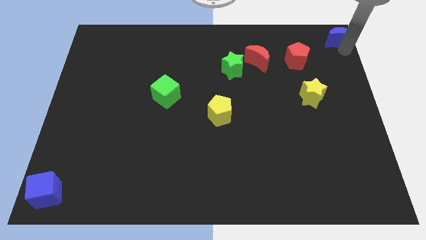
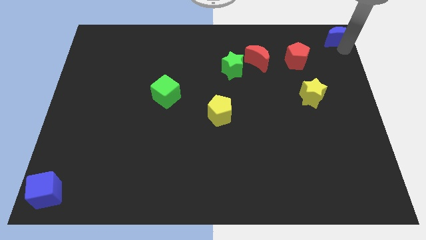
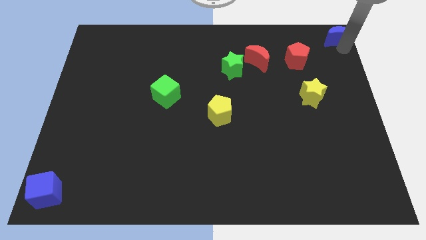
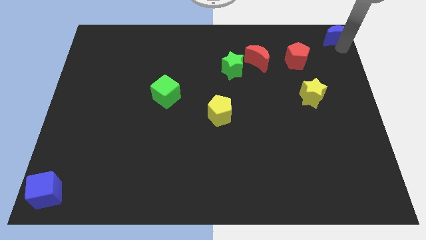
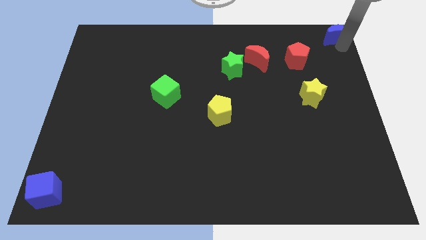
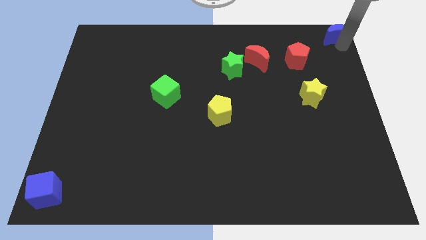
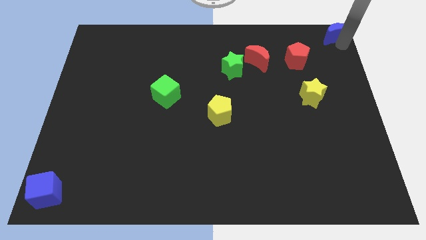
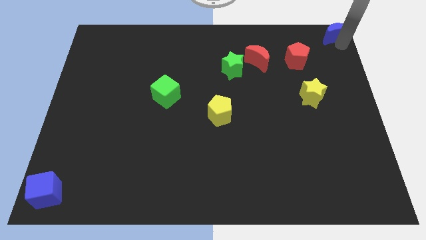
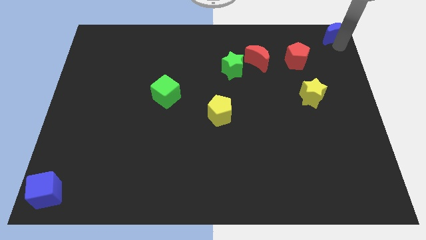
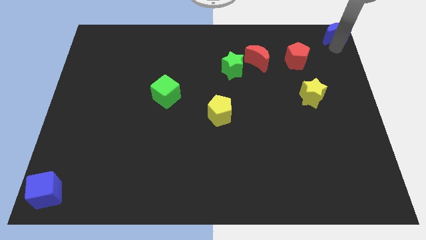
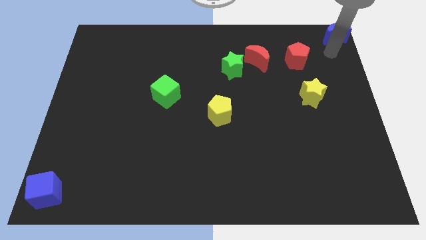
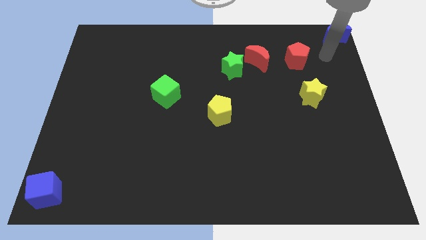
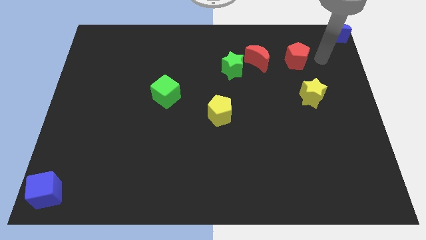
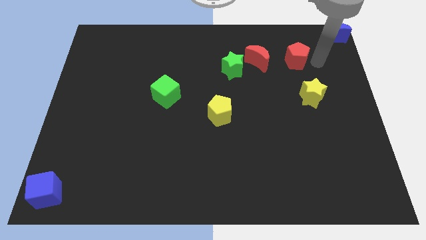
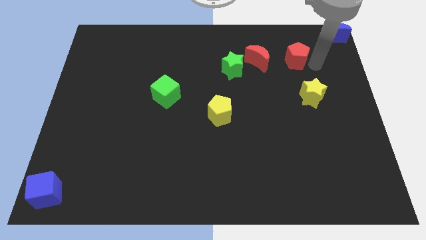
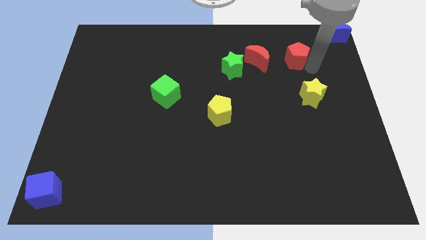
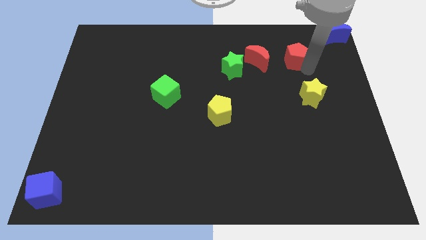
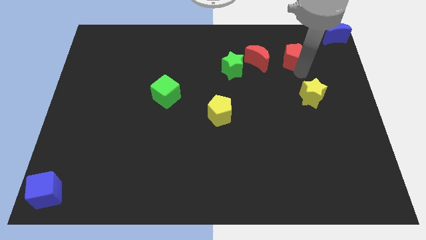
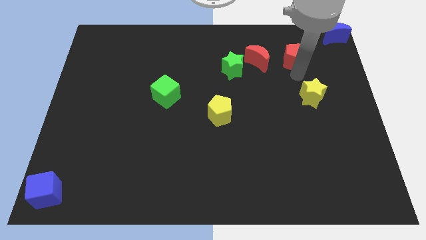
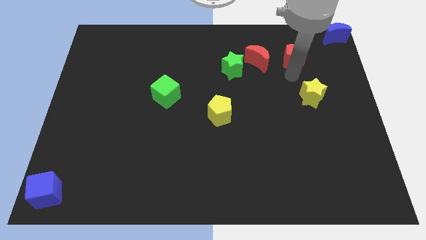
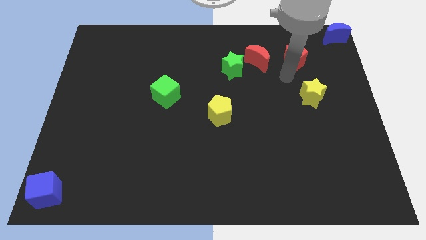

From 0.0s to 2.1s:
move arm near to the red pentagon

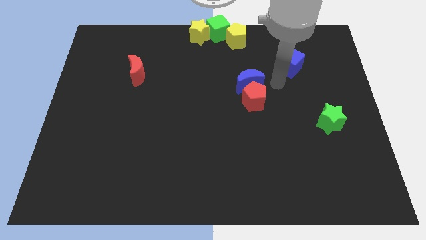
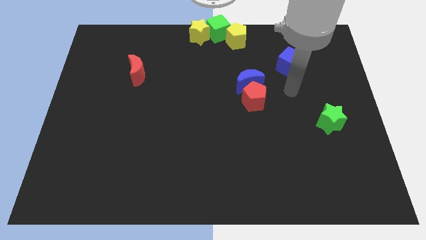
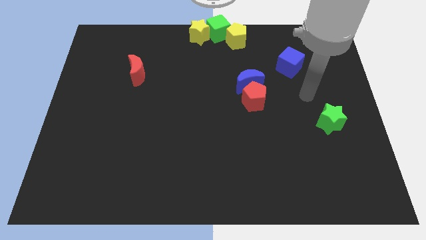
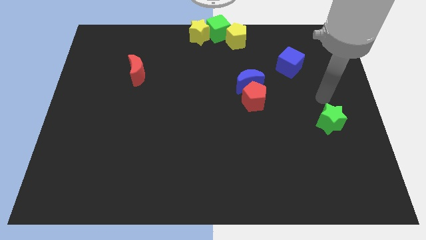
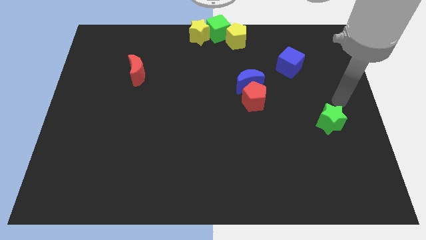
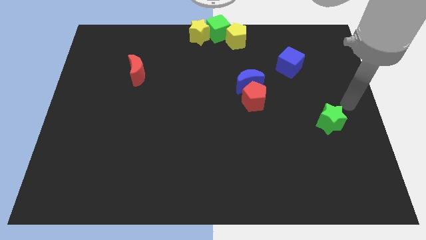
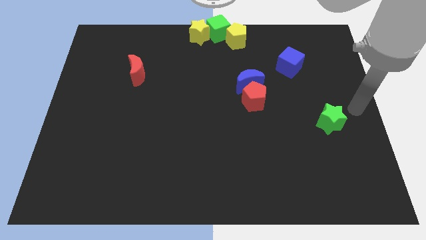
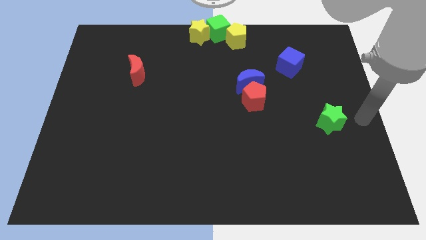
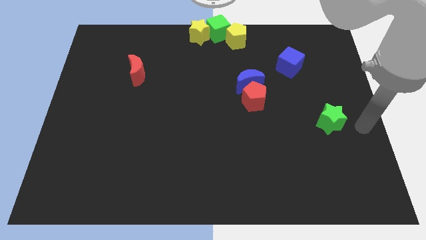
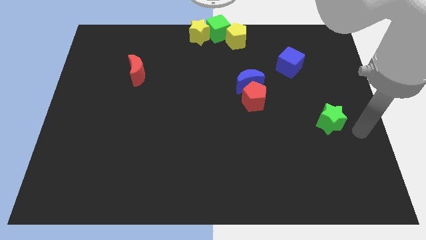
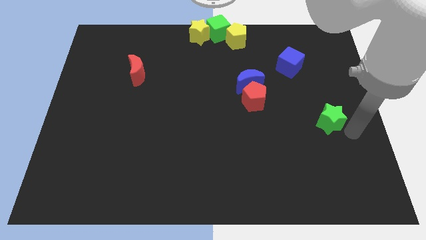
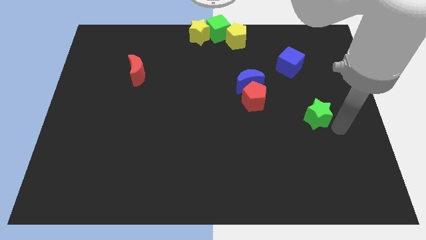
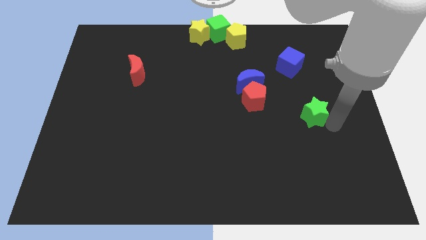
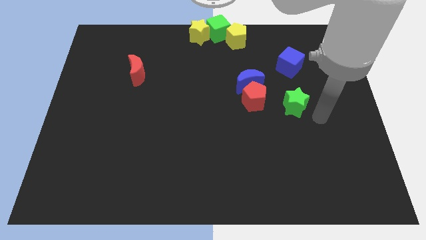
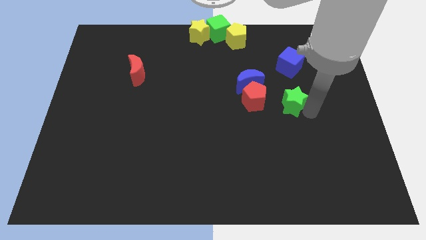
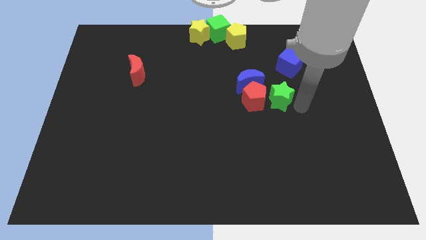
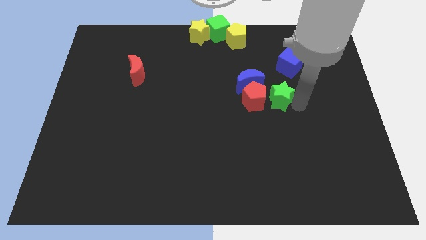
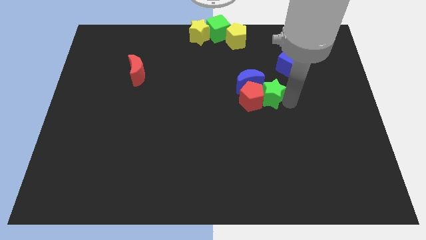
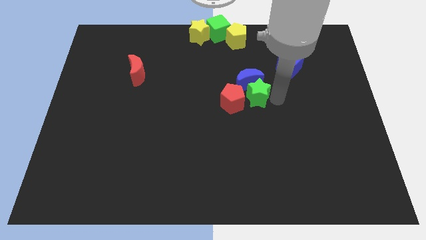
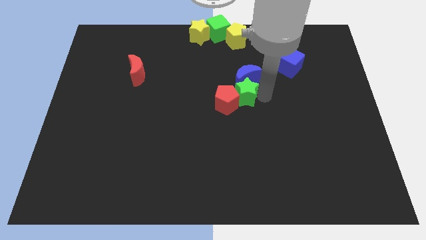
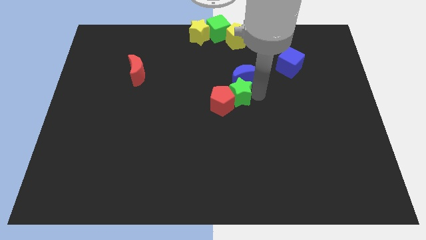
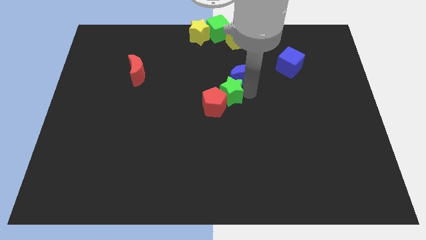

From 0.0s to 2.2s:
push the green star into the red pentagon

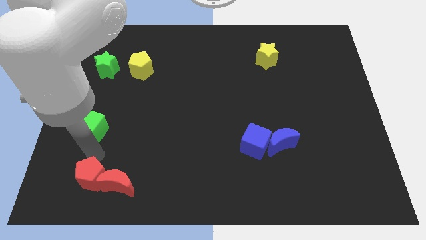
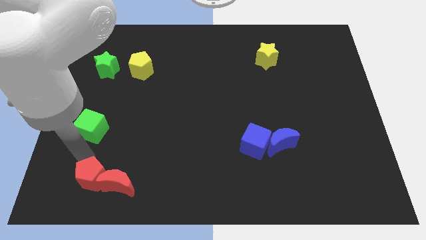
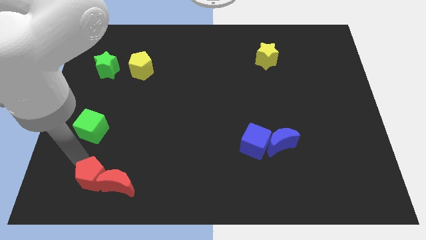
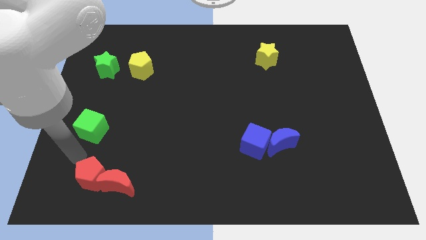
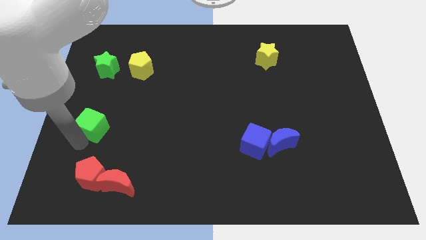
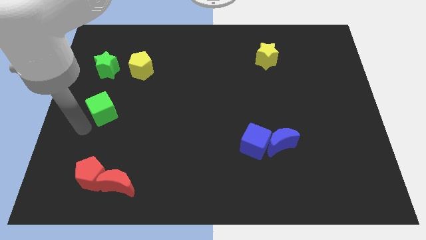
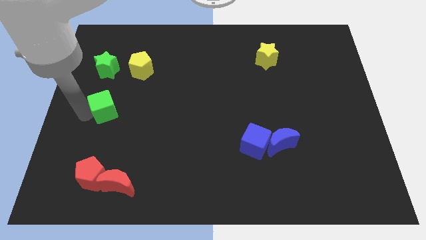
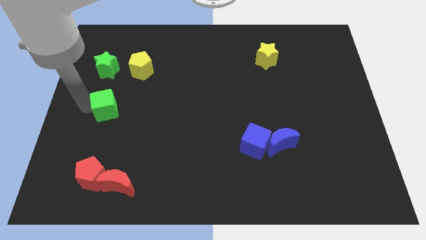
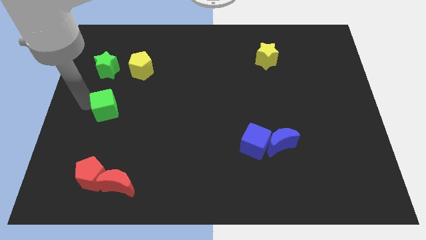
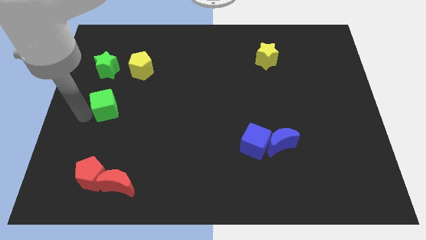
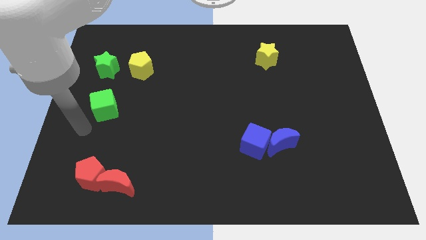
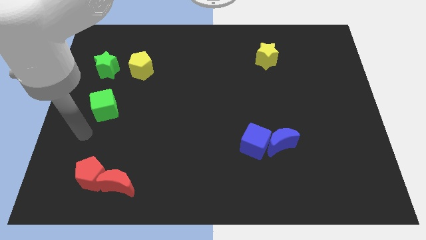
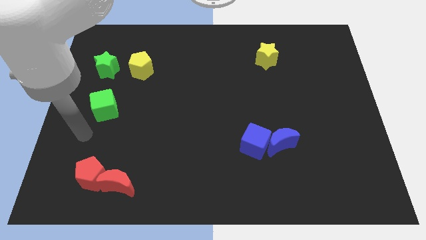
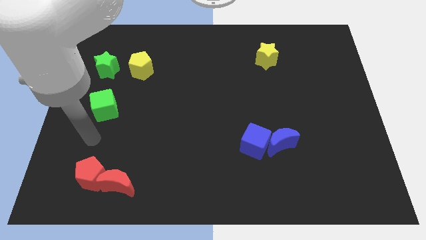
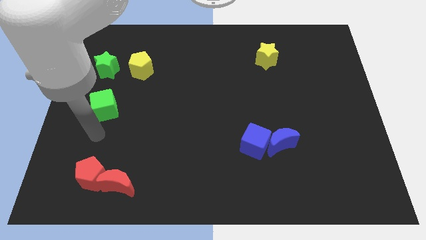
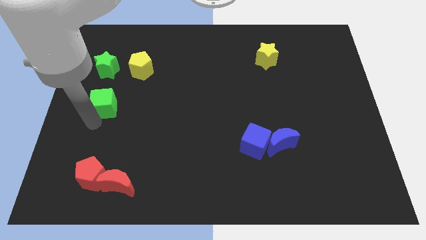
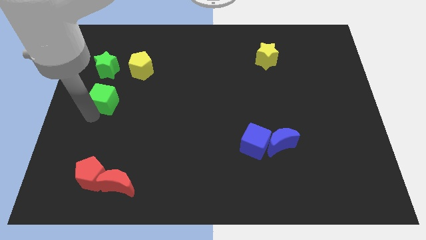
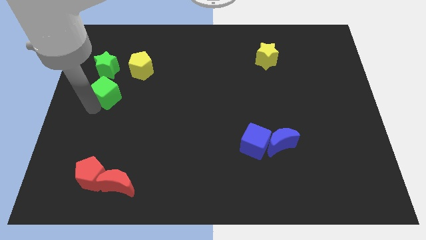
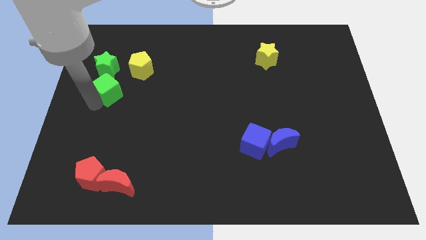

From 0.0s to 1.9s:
push green cube towards green star

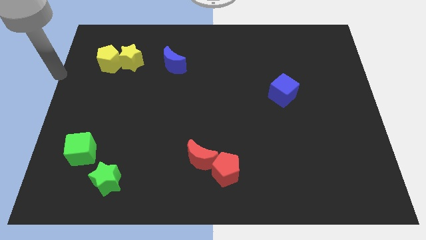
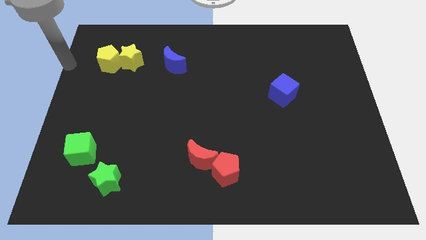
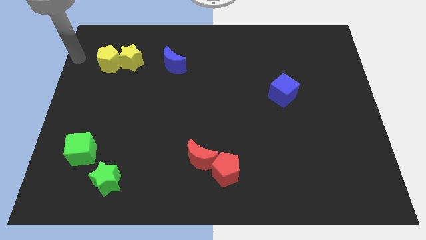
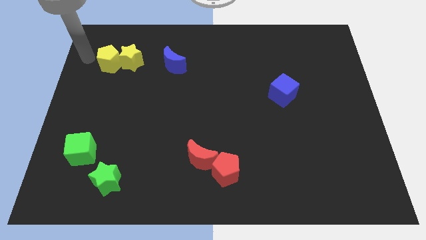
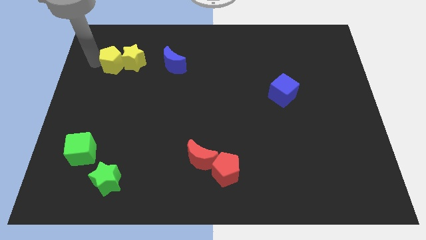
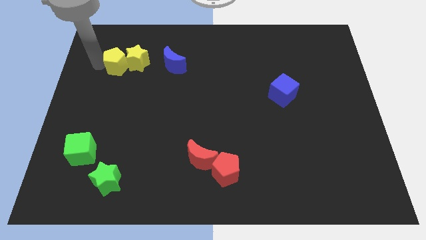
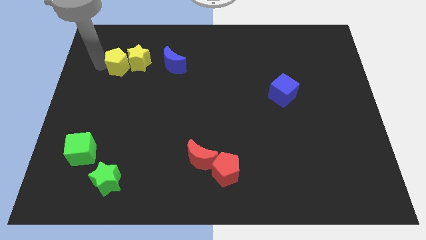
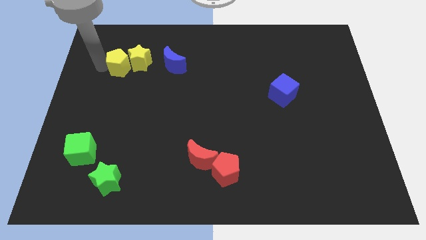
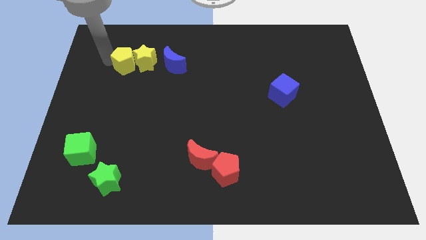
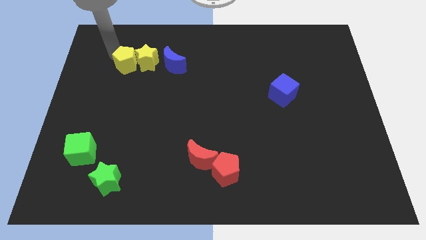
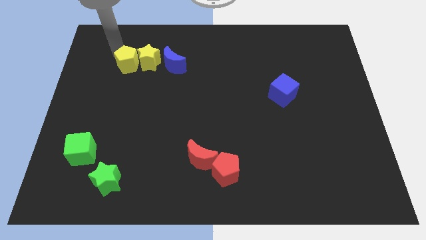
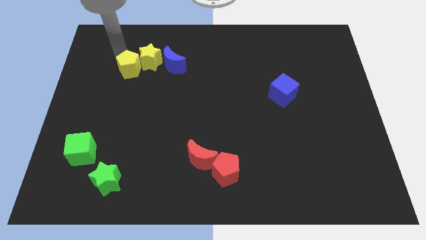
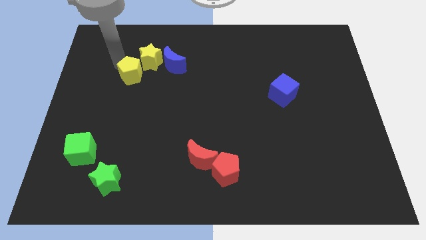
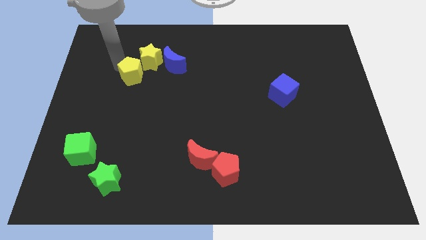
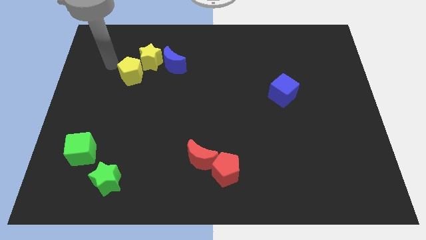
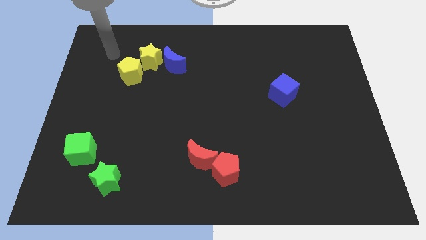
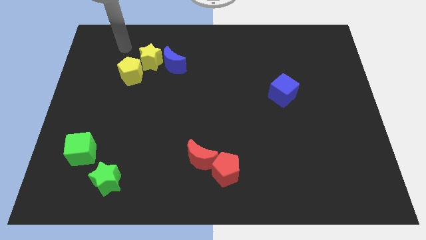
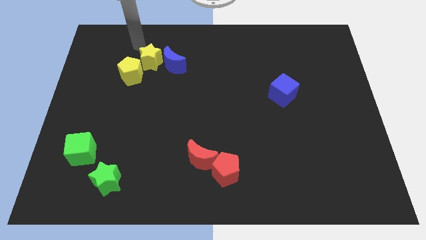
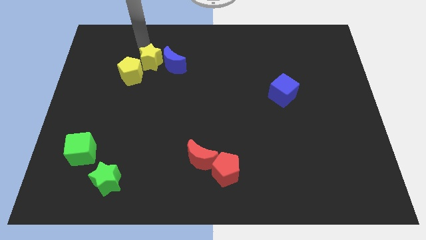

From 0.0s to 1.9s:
push the yellow blocks left to the blue moon

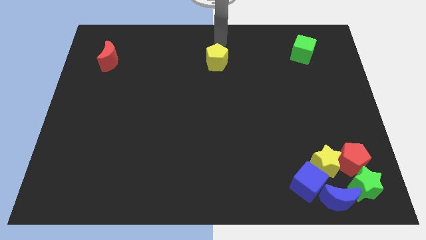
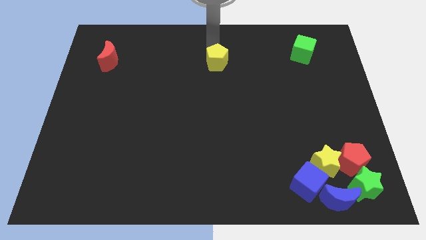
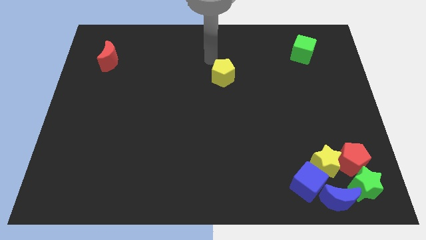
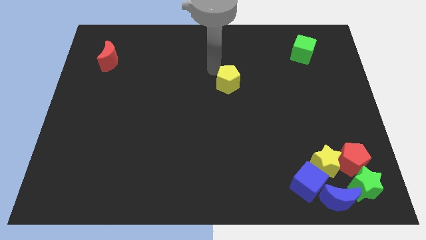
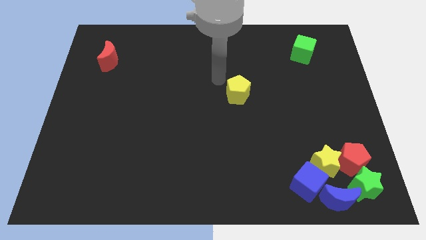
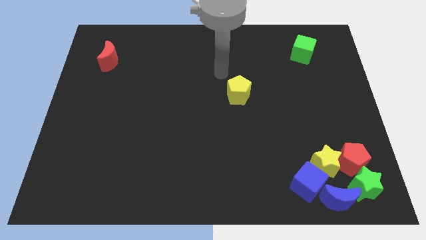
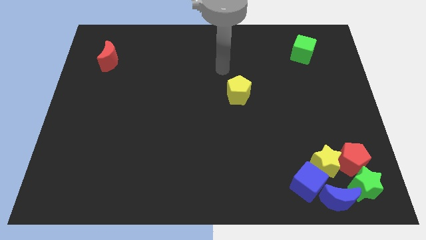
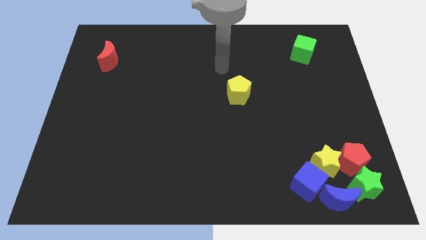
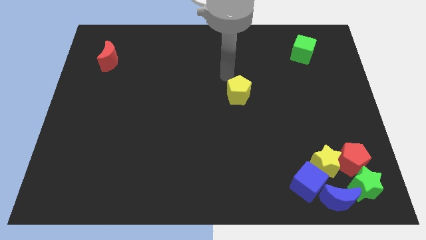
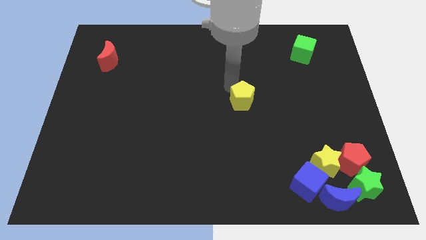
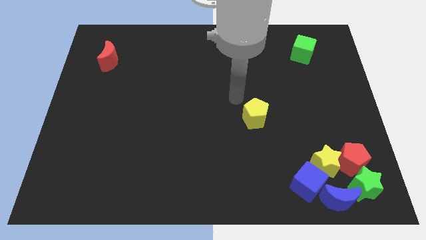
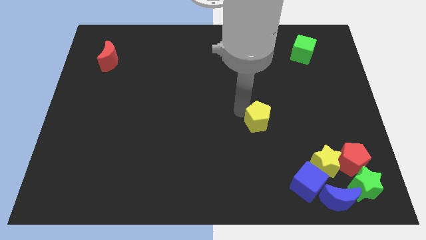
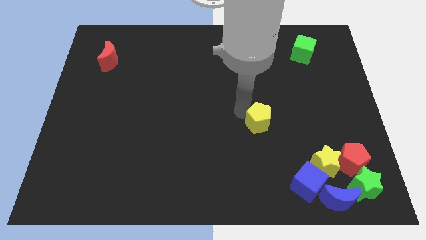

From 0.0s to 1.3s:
push the yellow block towards the group blocks
